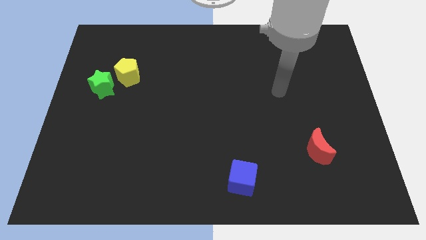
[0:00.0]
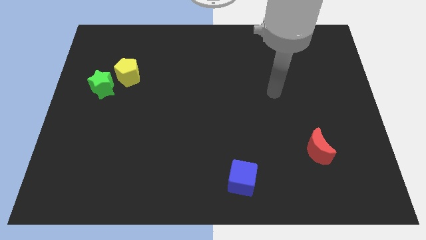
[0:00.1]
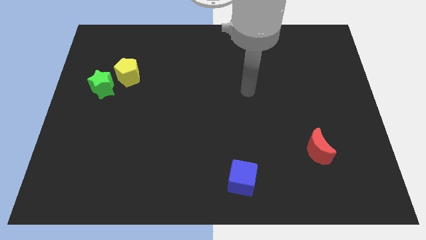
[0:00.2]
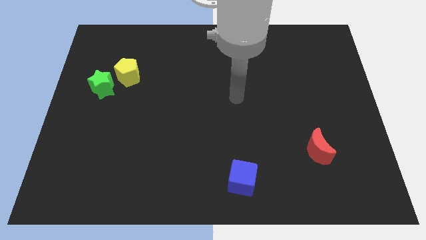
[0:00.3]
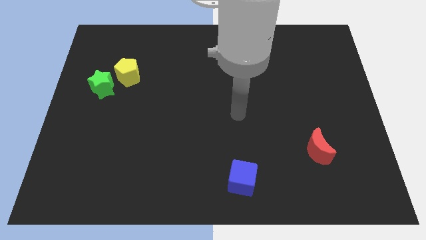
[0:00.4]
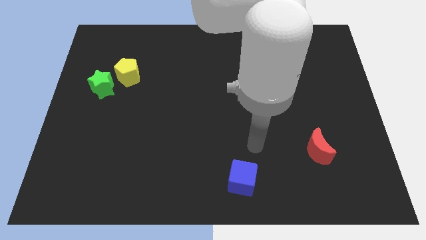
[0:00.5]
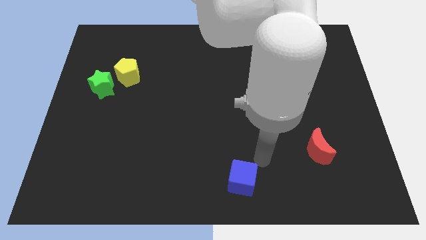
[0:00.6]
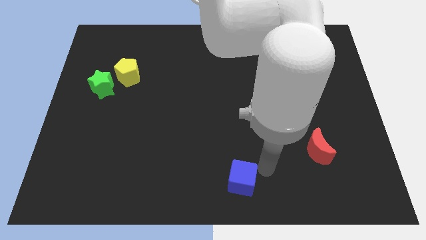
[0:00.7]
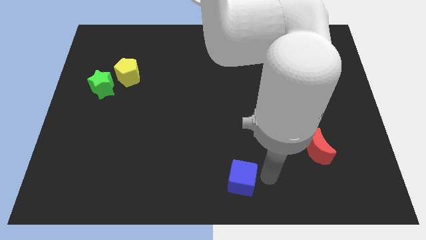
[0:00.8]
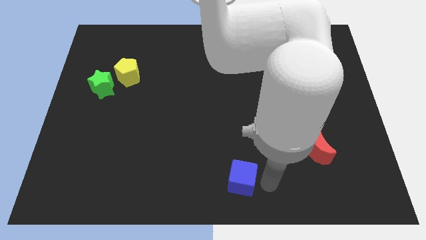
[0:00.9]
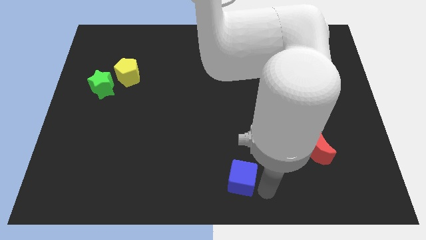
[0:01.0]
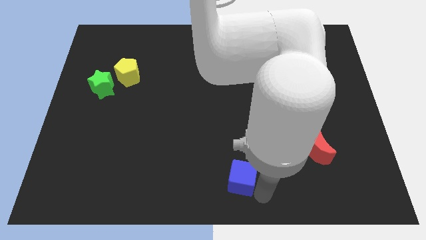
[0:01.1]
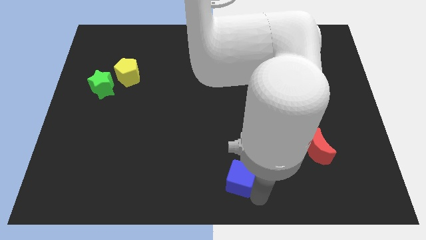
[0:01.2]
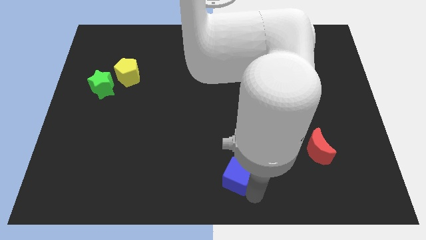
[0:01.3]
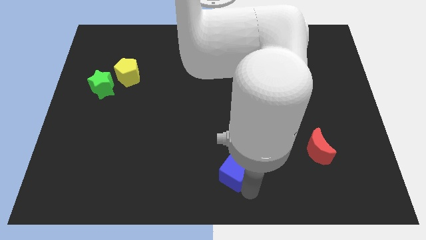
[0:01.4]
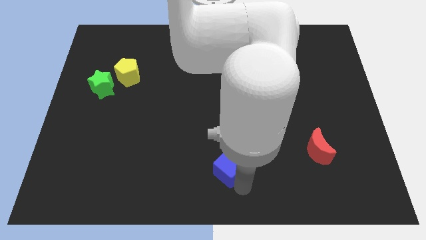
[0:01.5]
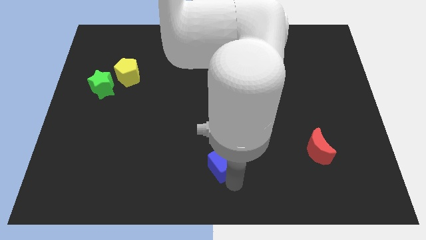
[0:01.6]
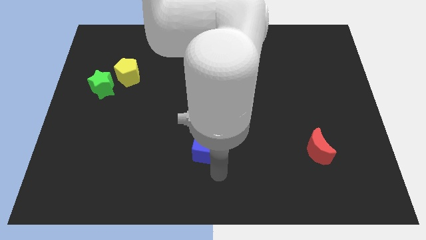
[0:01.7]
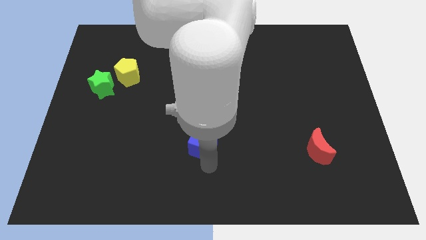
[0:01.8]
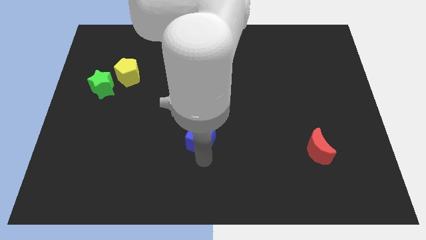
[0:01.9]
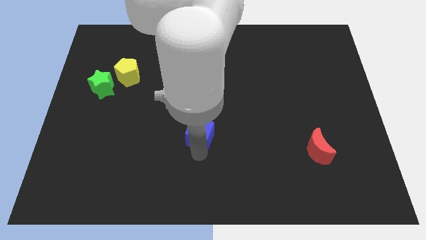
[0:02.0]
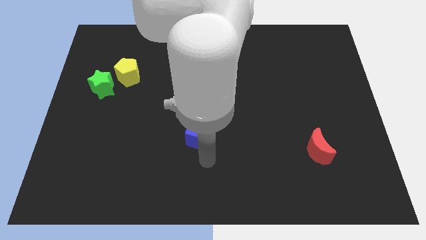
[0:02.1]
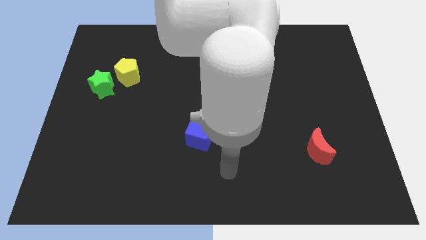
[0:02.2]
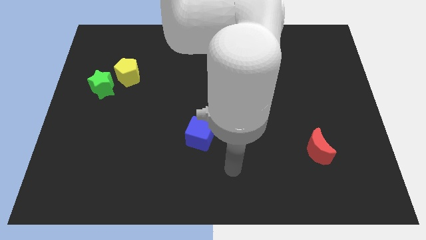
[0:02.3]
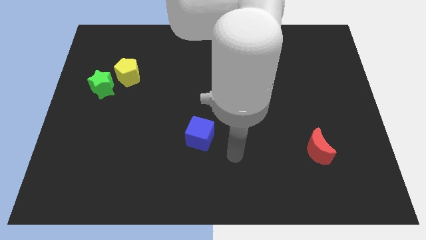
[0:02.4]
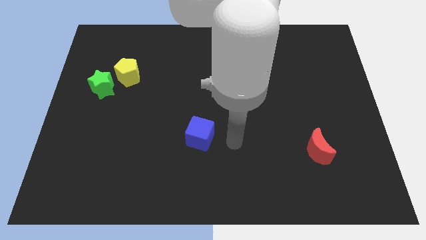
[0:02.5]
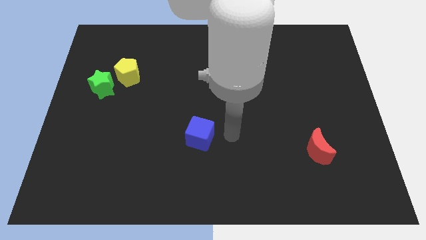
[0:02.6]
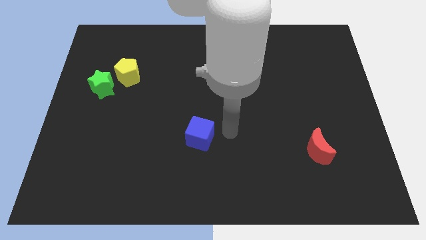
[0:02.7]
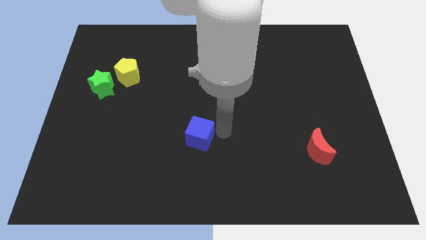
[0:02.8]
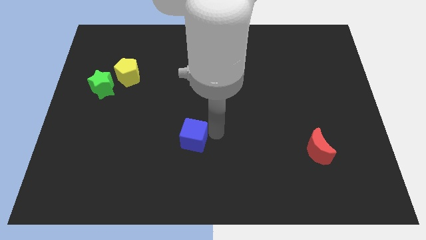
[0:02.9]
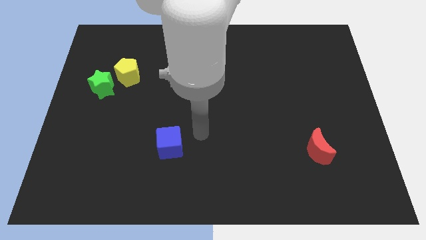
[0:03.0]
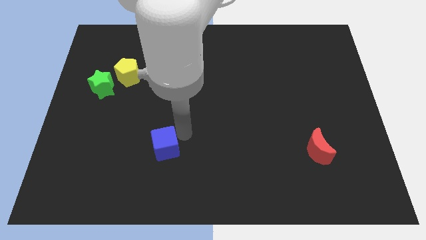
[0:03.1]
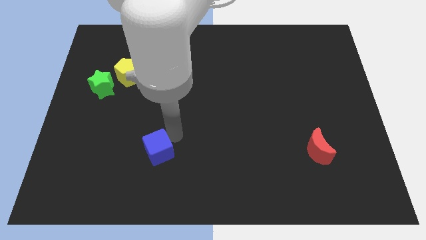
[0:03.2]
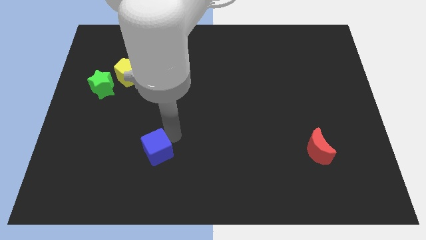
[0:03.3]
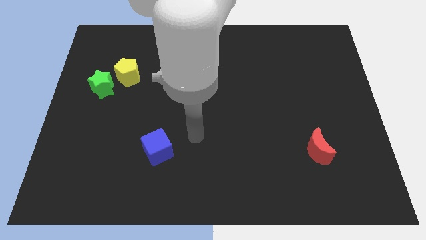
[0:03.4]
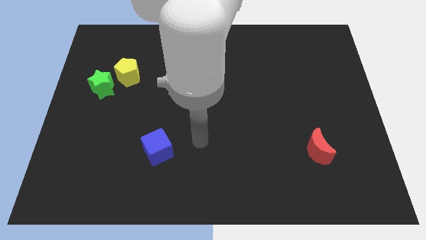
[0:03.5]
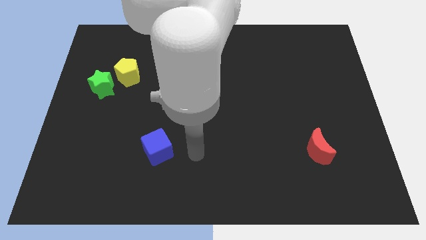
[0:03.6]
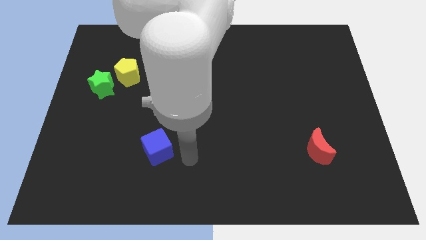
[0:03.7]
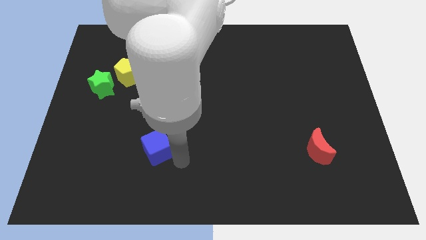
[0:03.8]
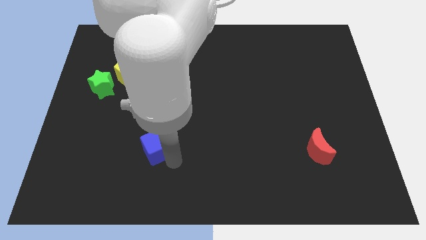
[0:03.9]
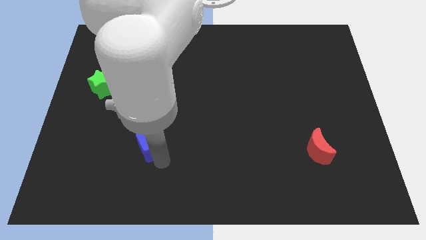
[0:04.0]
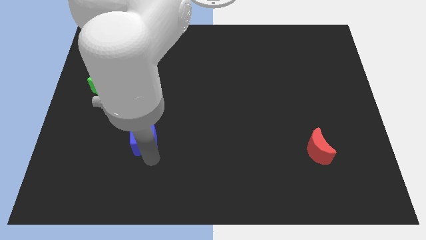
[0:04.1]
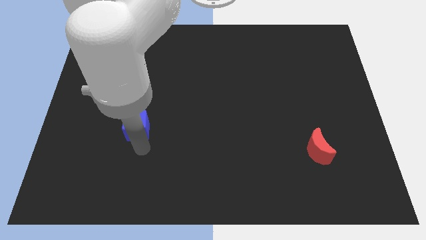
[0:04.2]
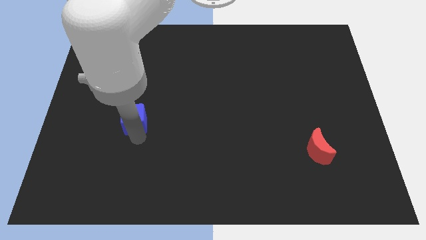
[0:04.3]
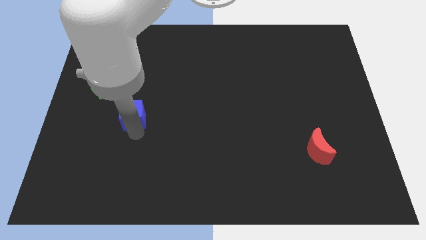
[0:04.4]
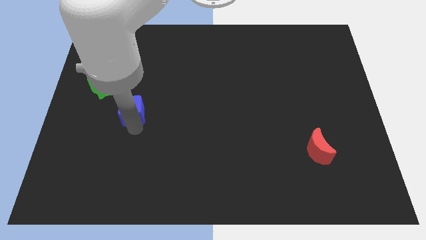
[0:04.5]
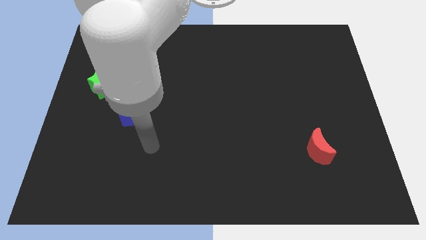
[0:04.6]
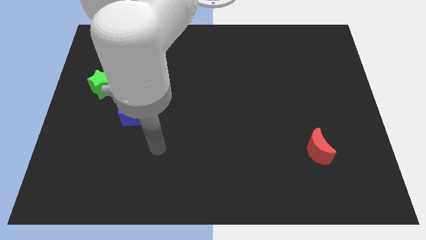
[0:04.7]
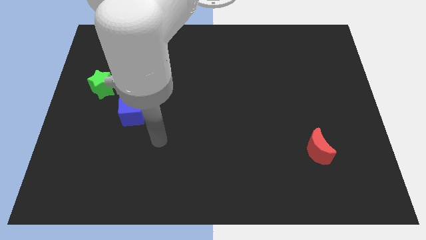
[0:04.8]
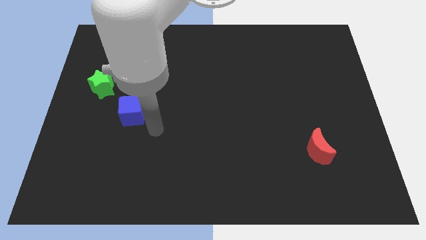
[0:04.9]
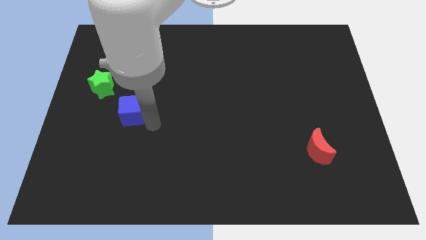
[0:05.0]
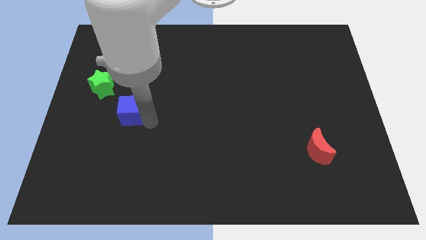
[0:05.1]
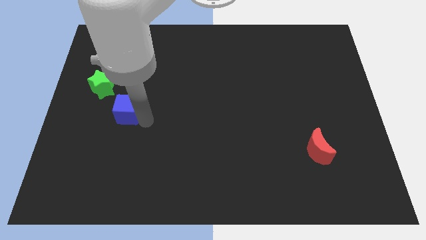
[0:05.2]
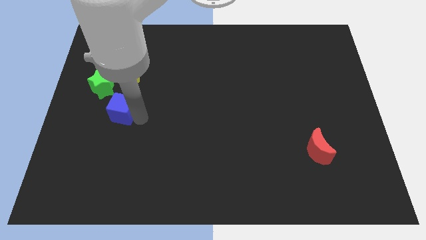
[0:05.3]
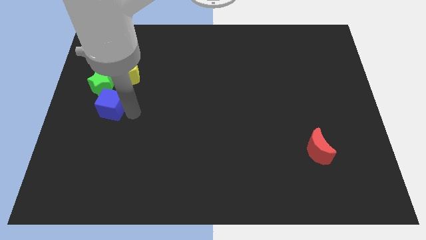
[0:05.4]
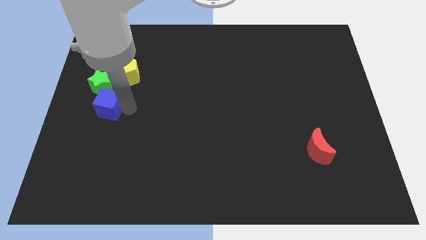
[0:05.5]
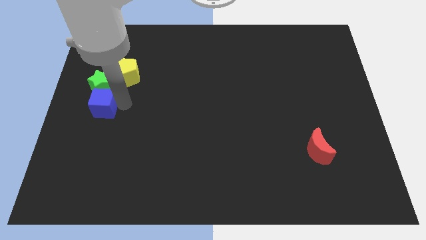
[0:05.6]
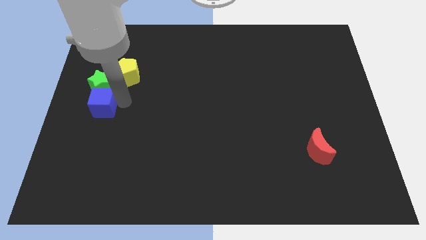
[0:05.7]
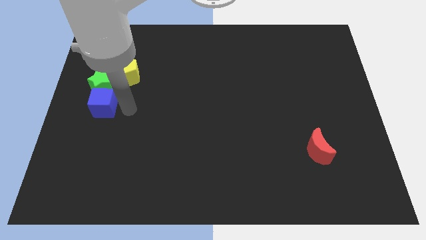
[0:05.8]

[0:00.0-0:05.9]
slide the blue cube close to the green block

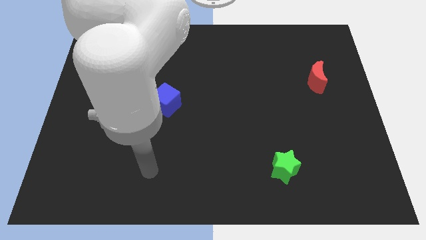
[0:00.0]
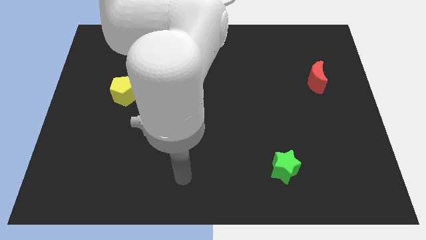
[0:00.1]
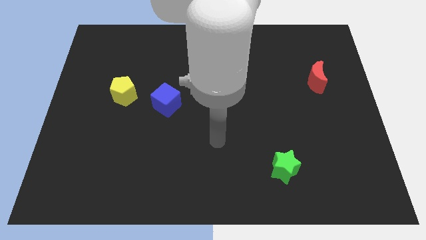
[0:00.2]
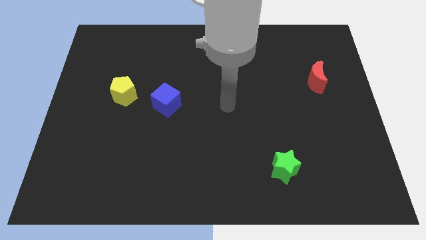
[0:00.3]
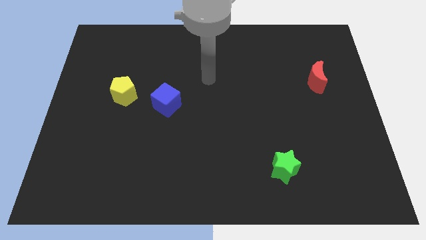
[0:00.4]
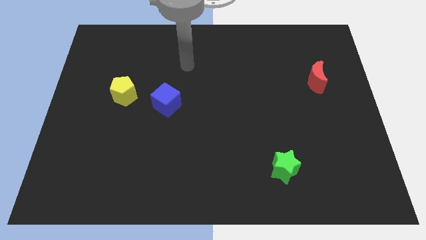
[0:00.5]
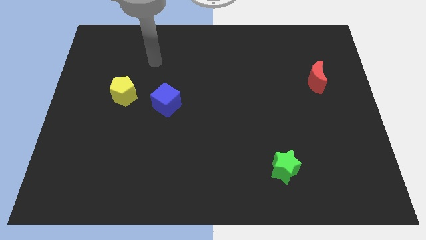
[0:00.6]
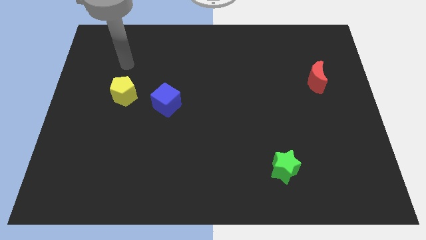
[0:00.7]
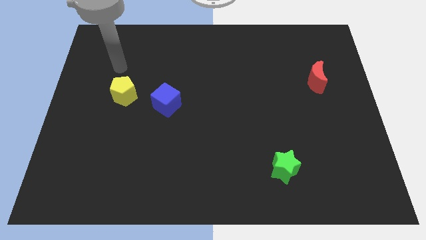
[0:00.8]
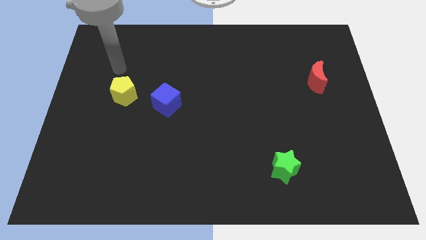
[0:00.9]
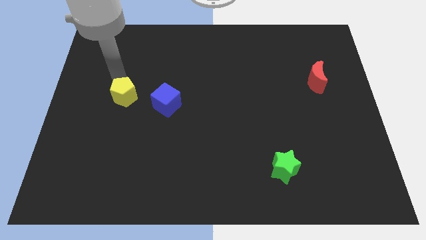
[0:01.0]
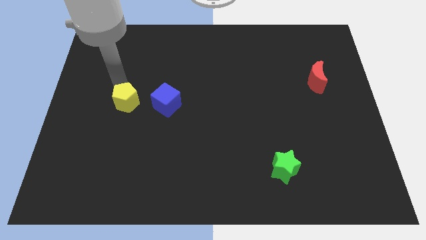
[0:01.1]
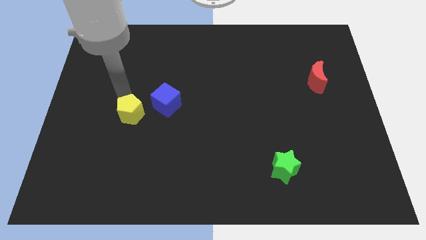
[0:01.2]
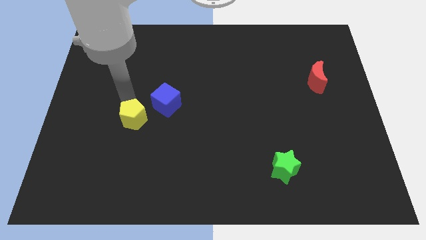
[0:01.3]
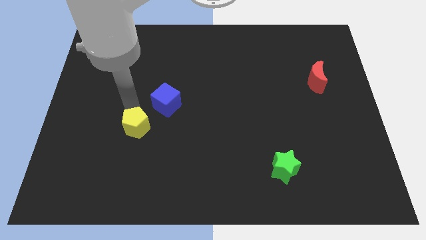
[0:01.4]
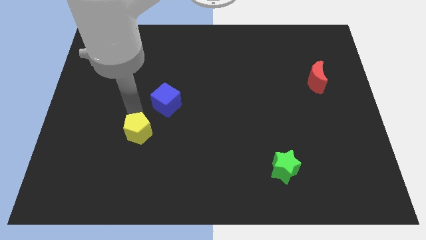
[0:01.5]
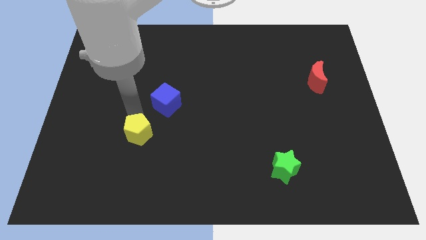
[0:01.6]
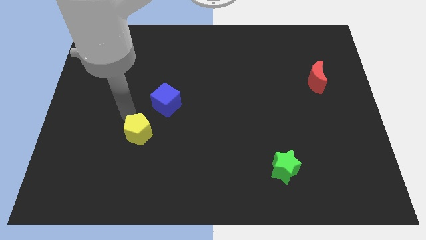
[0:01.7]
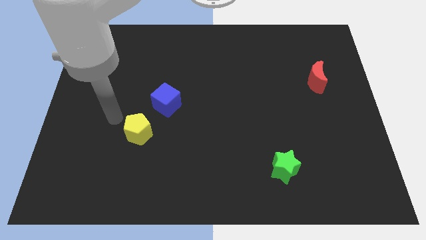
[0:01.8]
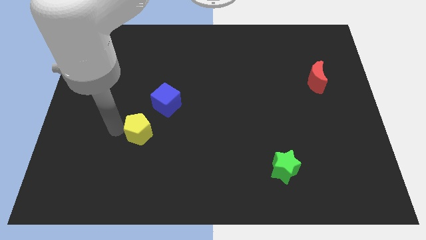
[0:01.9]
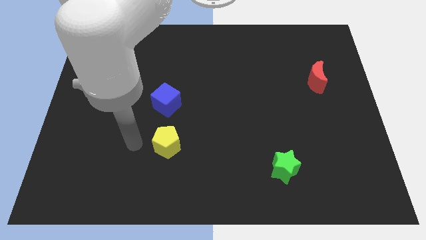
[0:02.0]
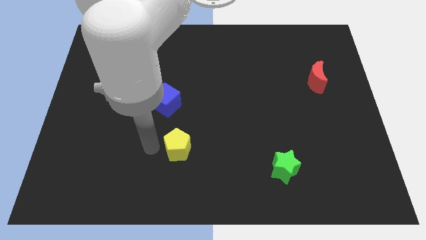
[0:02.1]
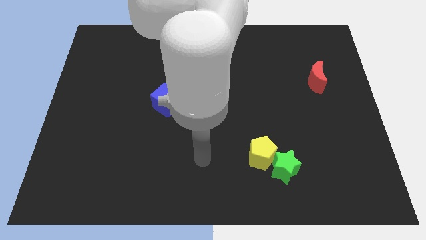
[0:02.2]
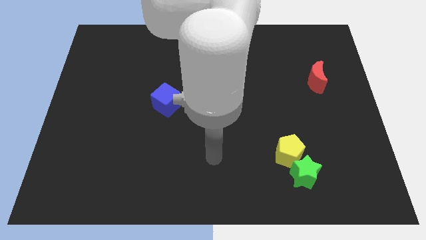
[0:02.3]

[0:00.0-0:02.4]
move the yellow pentagon towards the star
